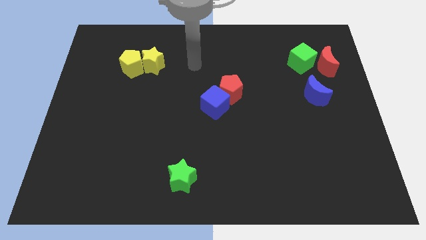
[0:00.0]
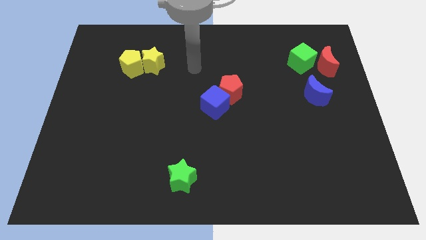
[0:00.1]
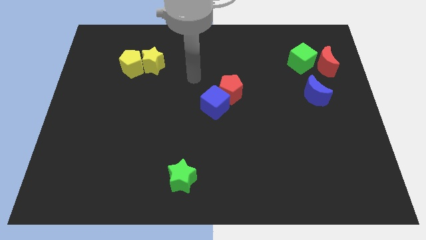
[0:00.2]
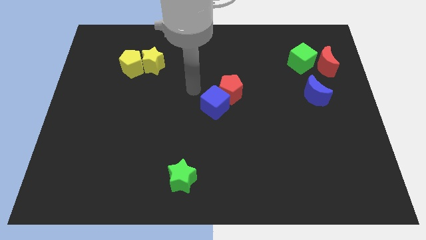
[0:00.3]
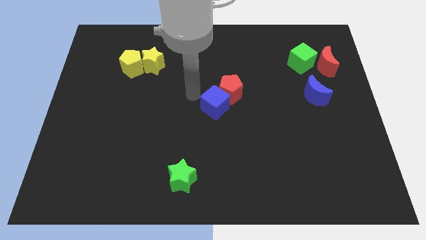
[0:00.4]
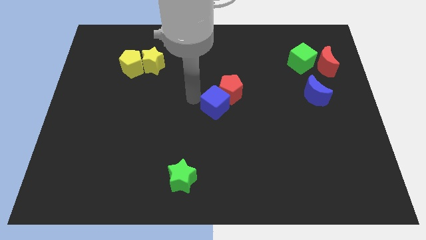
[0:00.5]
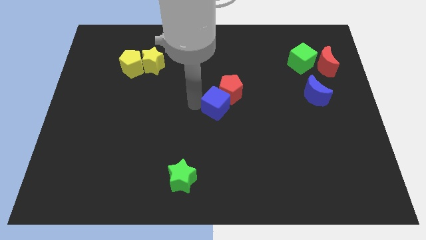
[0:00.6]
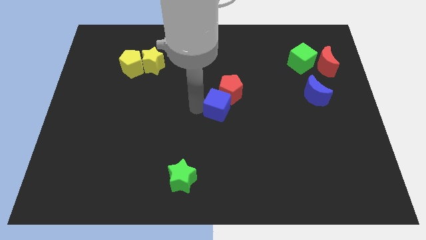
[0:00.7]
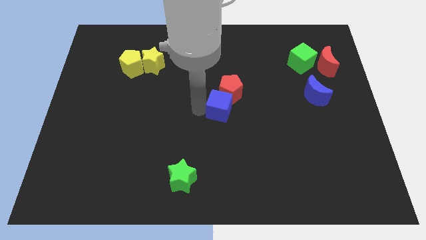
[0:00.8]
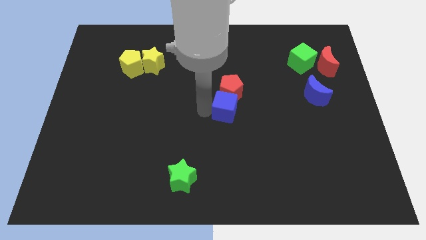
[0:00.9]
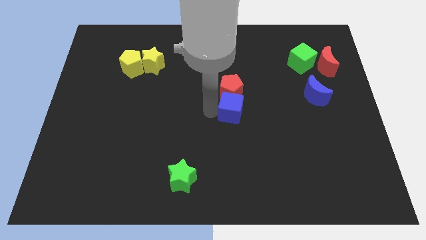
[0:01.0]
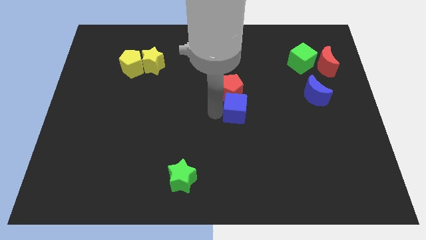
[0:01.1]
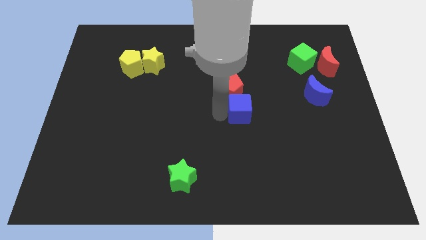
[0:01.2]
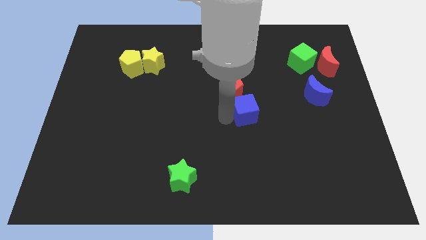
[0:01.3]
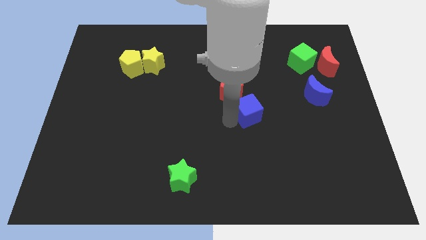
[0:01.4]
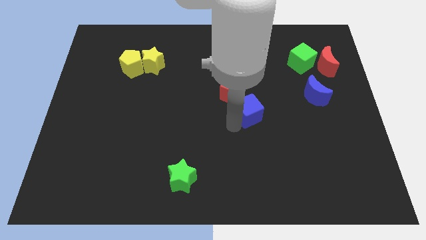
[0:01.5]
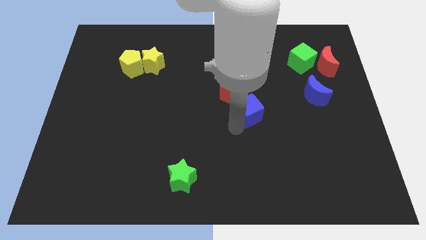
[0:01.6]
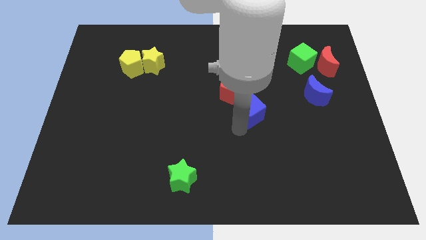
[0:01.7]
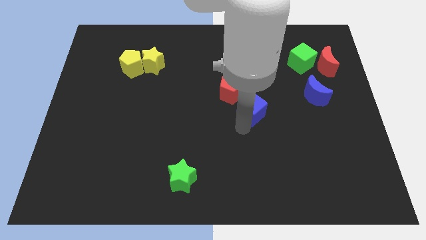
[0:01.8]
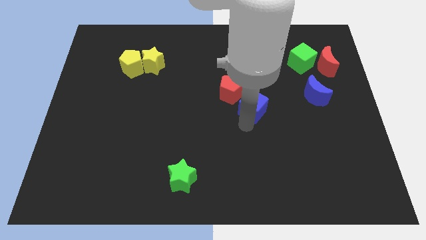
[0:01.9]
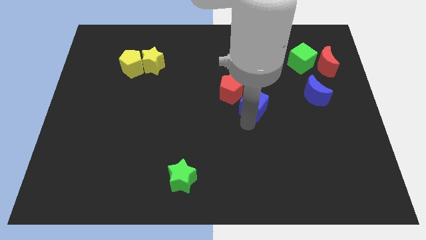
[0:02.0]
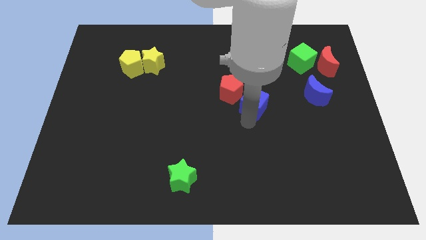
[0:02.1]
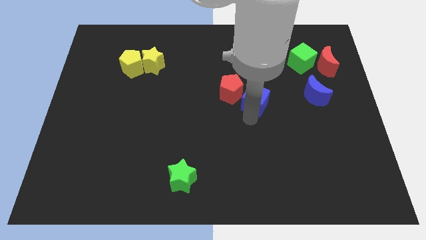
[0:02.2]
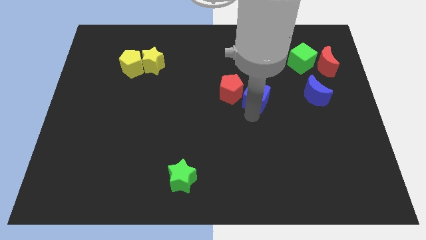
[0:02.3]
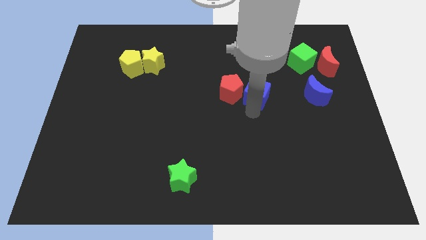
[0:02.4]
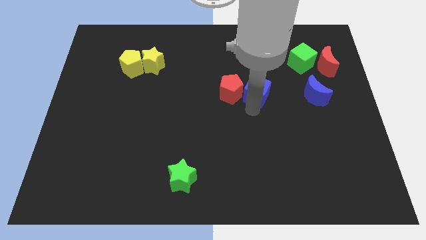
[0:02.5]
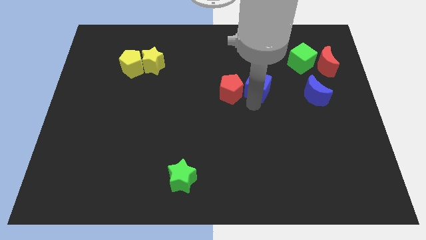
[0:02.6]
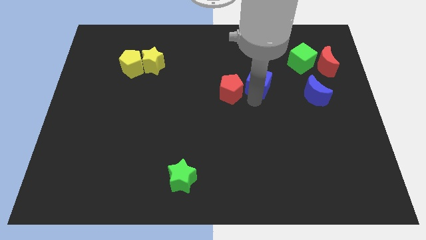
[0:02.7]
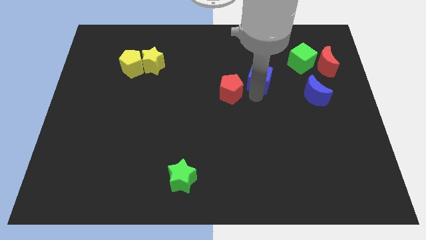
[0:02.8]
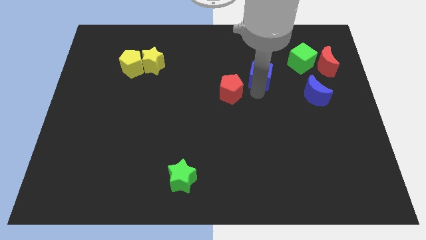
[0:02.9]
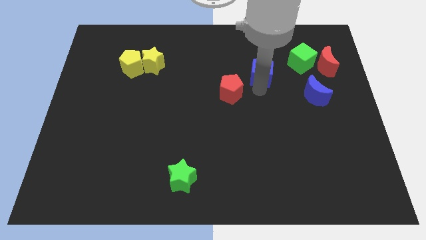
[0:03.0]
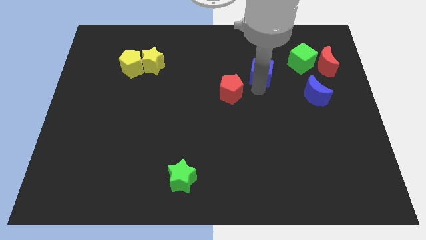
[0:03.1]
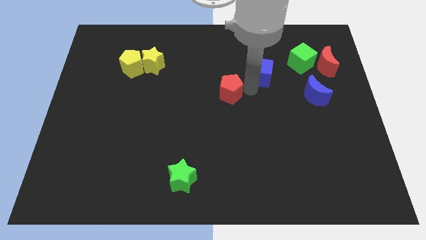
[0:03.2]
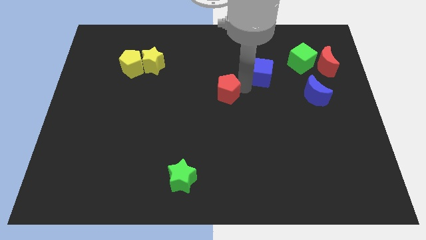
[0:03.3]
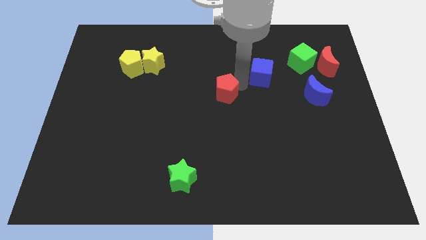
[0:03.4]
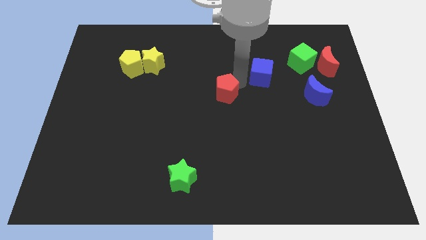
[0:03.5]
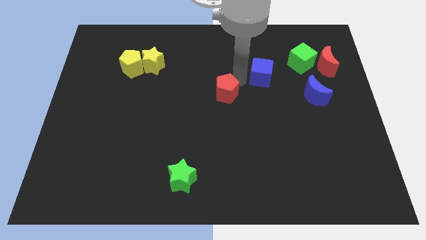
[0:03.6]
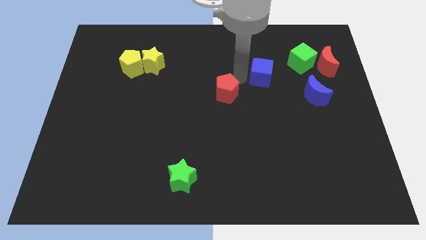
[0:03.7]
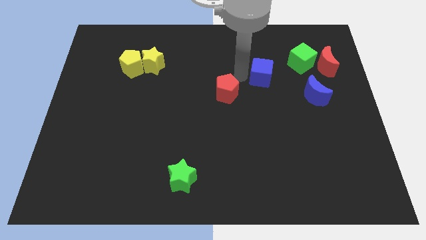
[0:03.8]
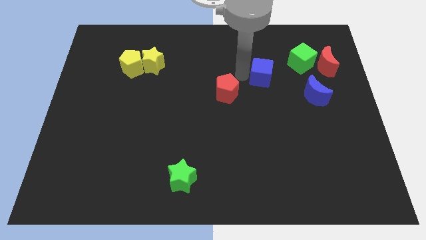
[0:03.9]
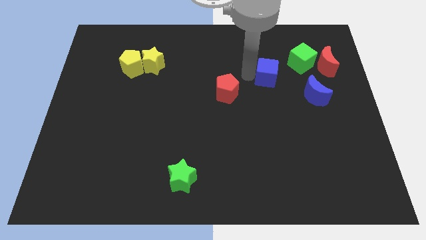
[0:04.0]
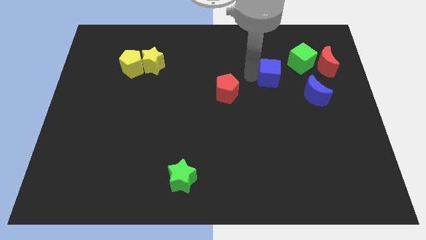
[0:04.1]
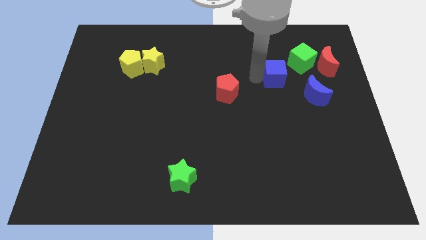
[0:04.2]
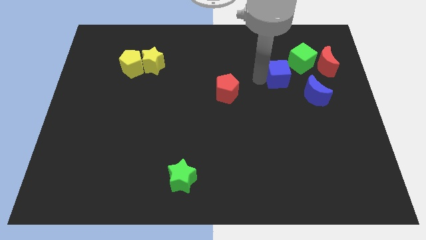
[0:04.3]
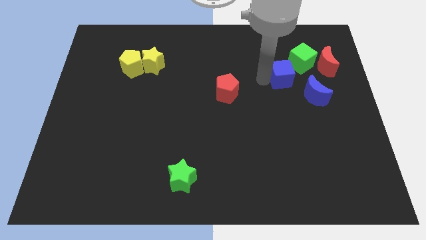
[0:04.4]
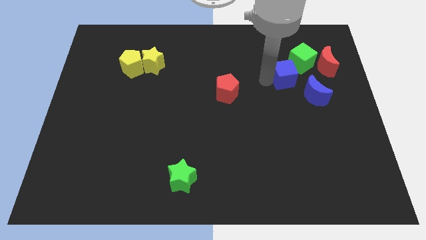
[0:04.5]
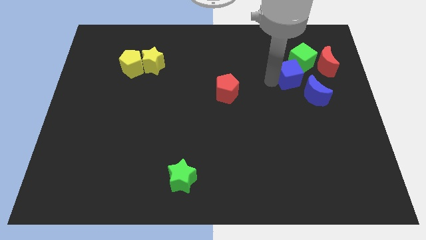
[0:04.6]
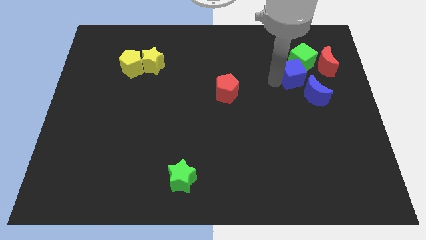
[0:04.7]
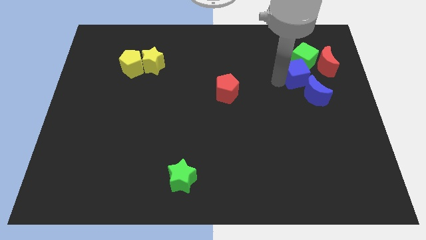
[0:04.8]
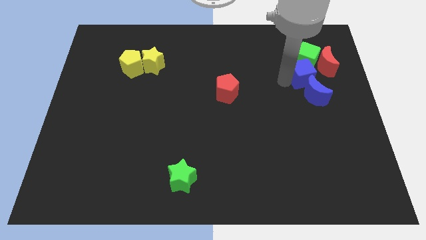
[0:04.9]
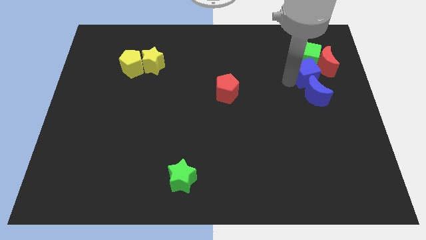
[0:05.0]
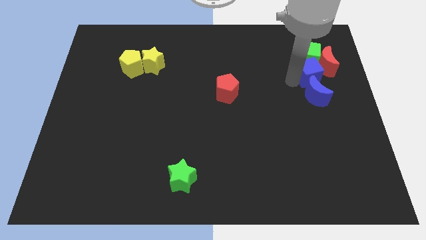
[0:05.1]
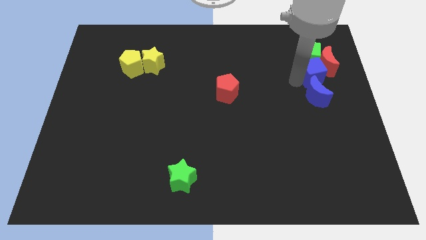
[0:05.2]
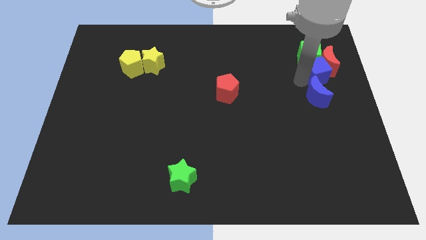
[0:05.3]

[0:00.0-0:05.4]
push the blue cube close to the red moon

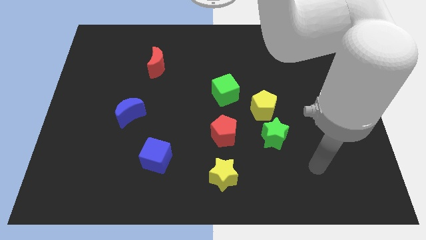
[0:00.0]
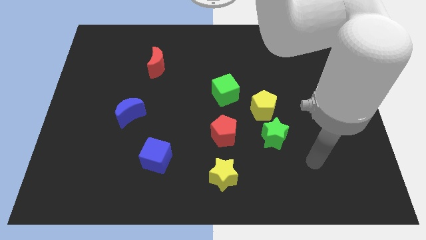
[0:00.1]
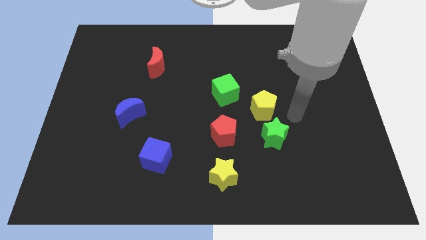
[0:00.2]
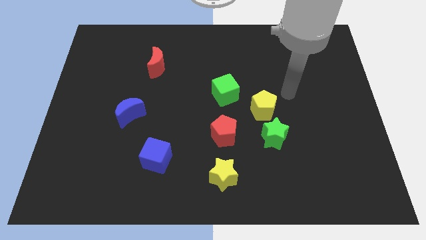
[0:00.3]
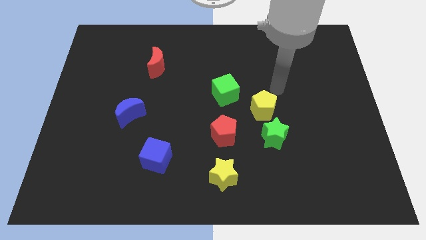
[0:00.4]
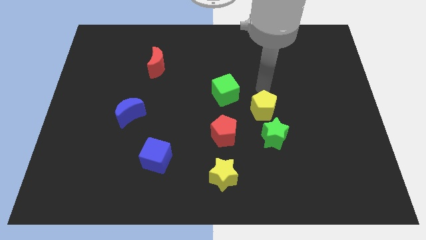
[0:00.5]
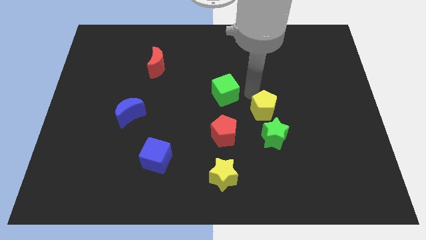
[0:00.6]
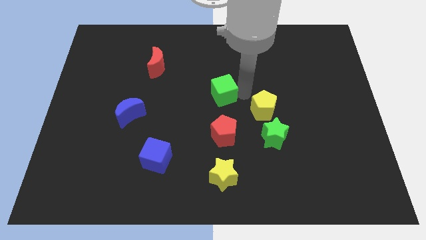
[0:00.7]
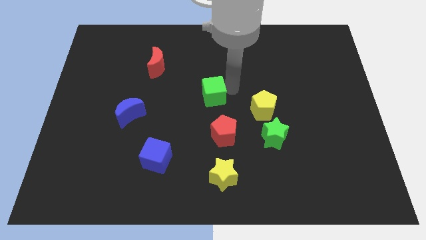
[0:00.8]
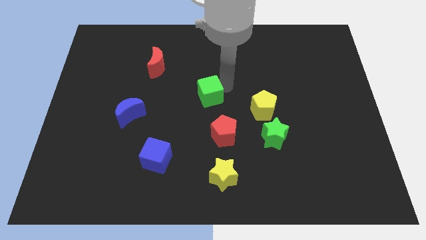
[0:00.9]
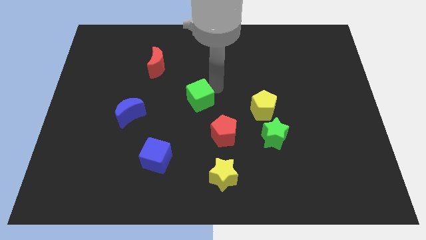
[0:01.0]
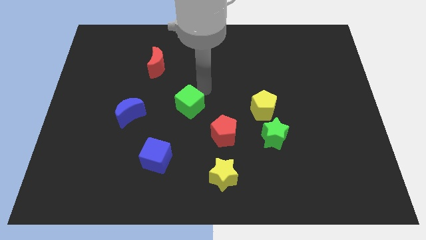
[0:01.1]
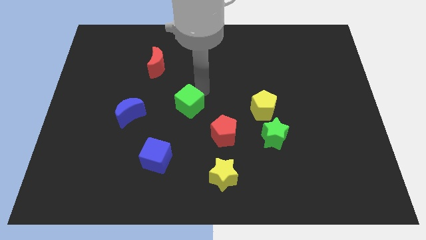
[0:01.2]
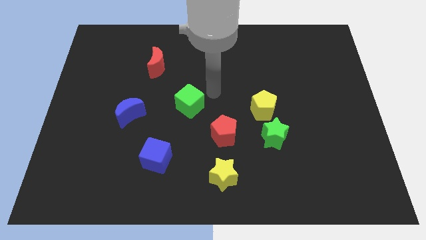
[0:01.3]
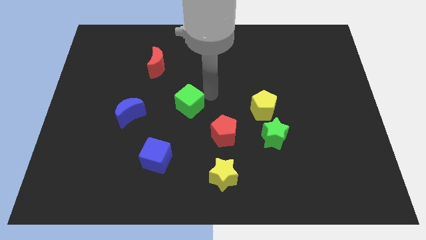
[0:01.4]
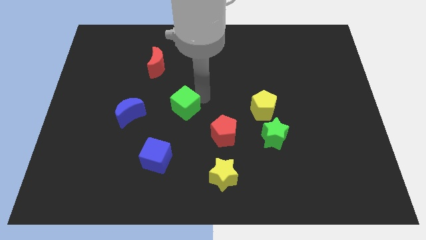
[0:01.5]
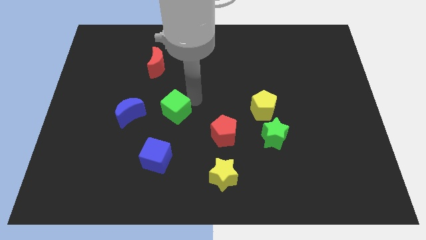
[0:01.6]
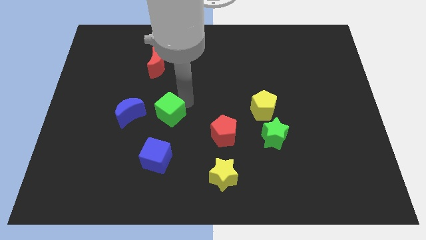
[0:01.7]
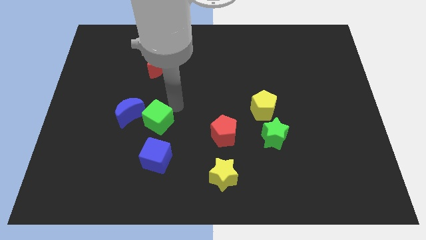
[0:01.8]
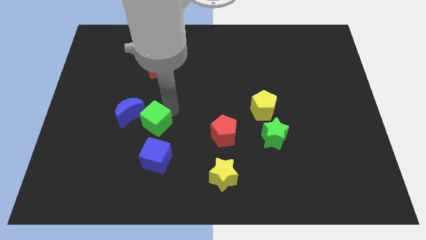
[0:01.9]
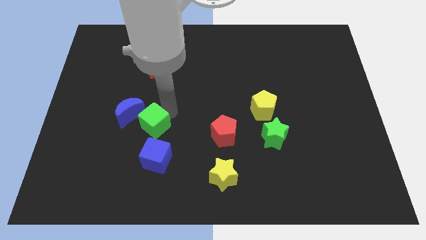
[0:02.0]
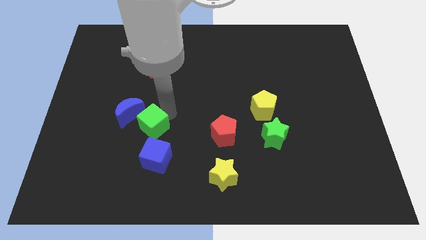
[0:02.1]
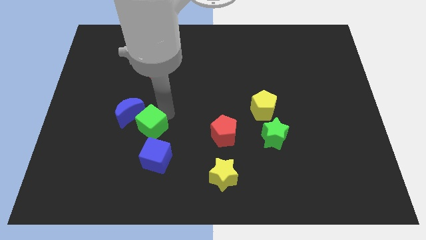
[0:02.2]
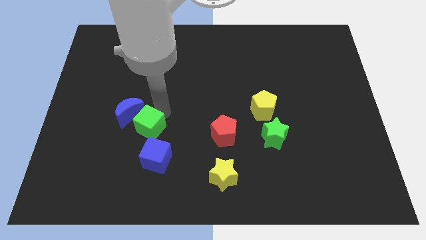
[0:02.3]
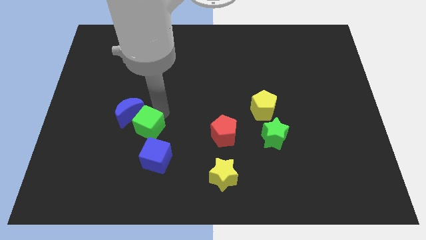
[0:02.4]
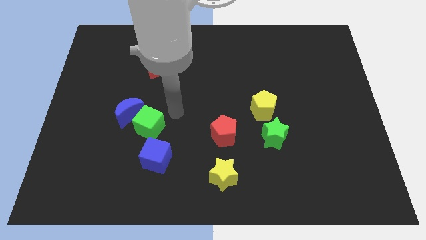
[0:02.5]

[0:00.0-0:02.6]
put the green cube towards the blue moon

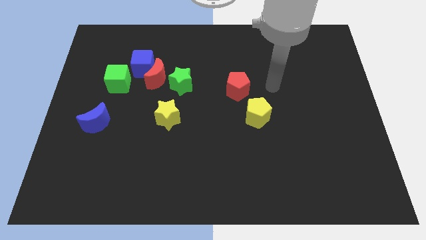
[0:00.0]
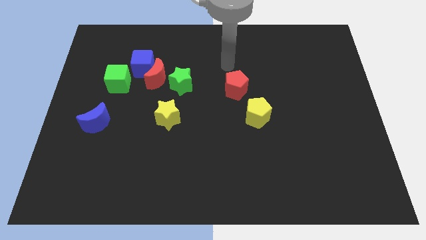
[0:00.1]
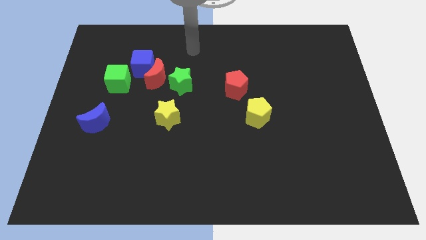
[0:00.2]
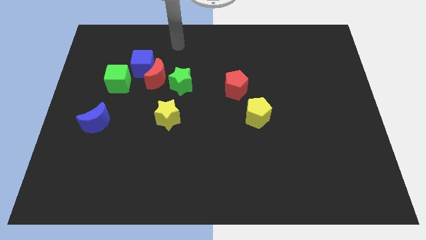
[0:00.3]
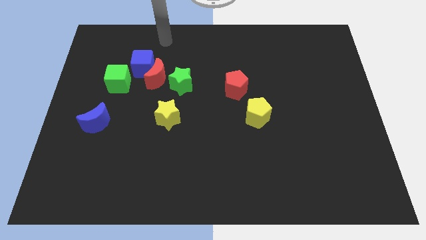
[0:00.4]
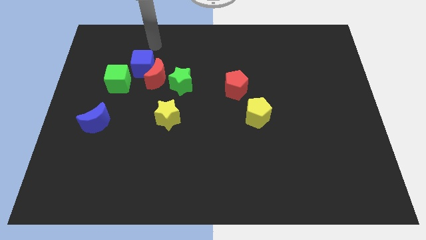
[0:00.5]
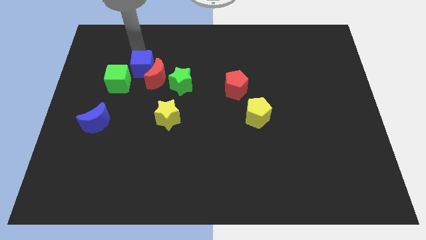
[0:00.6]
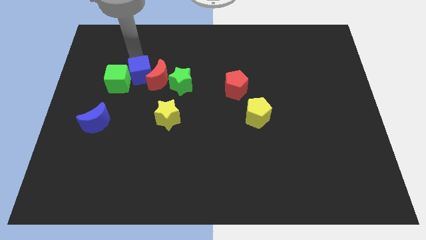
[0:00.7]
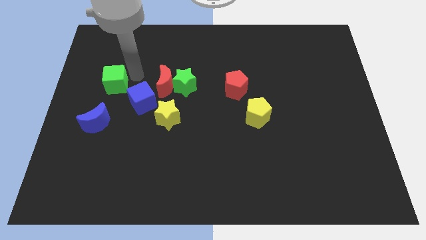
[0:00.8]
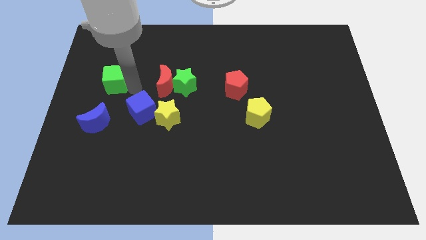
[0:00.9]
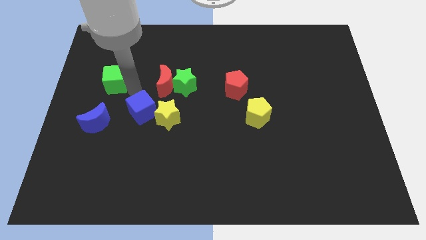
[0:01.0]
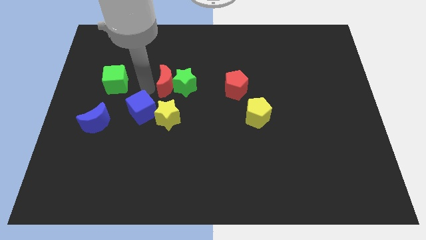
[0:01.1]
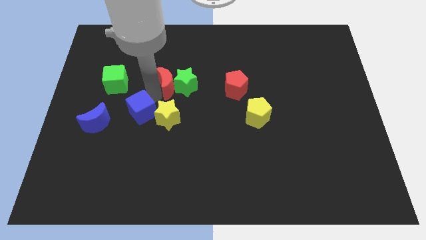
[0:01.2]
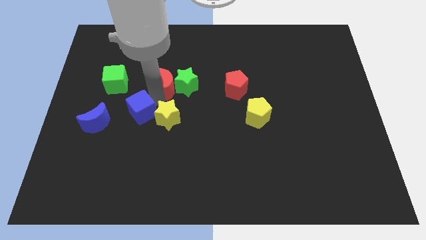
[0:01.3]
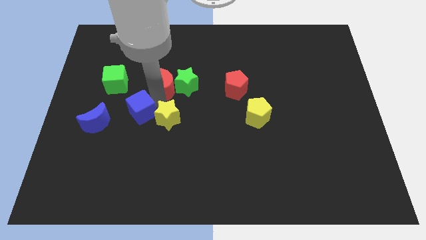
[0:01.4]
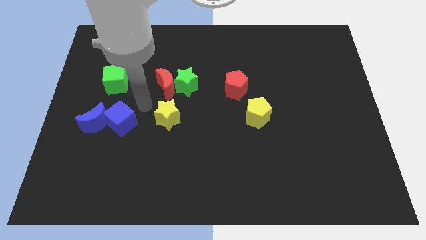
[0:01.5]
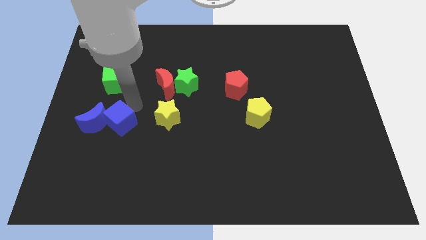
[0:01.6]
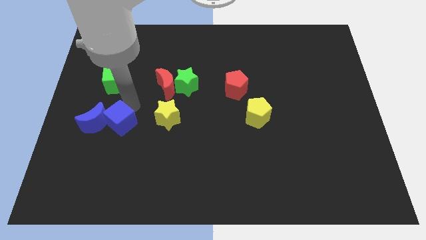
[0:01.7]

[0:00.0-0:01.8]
push the blue cube to the blue moon
